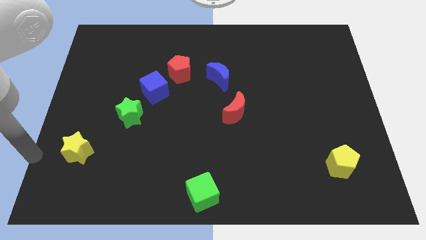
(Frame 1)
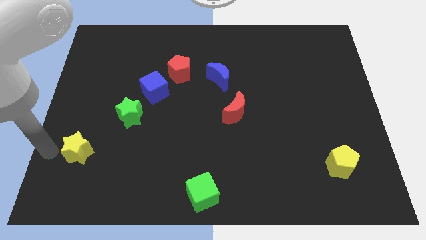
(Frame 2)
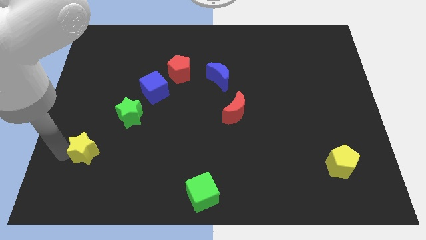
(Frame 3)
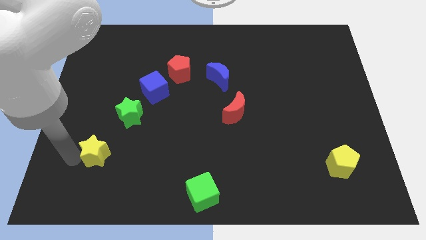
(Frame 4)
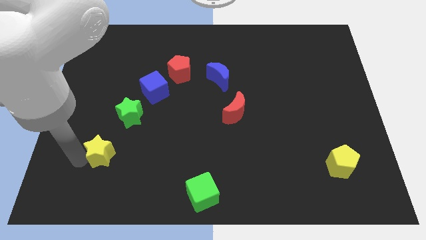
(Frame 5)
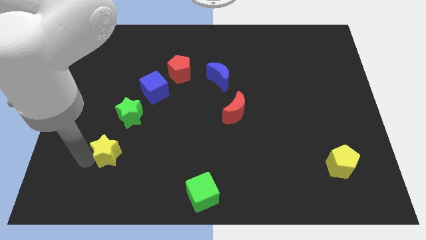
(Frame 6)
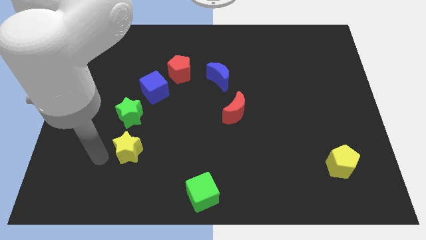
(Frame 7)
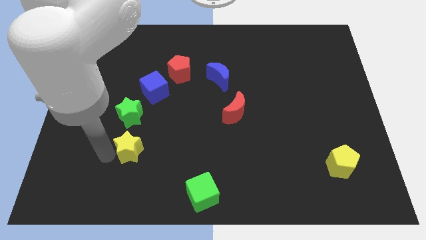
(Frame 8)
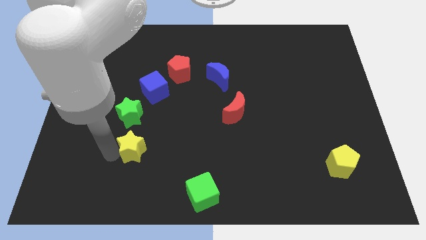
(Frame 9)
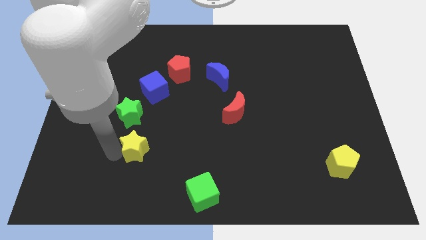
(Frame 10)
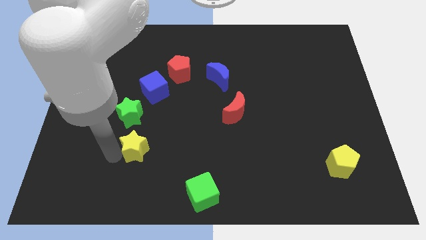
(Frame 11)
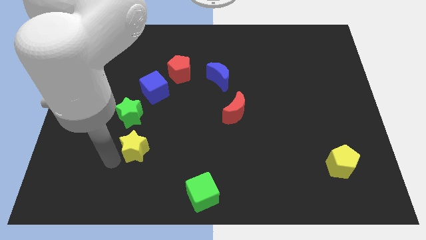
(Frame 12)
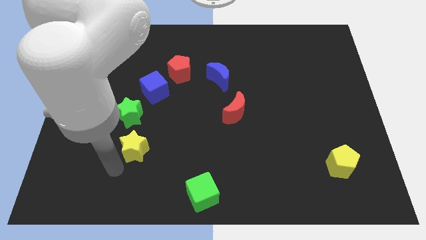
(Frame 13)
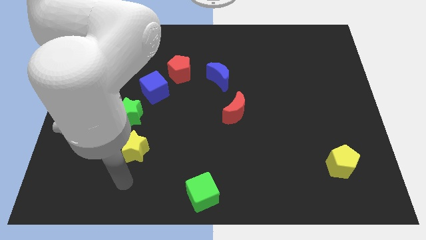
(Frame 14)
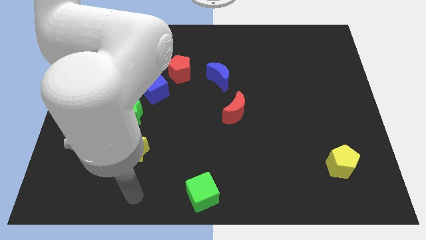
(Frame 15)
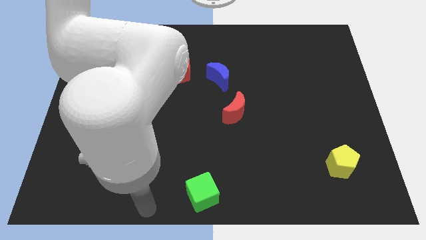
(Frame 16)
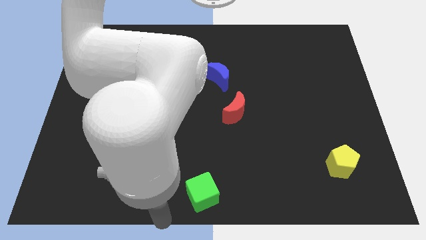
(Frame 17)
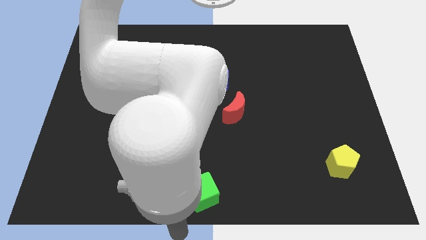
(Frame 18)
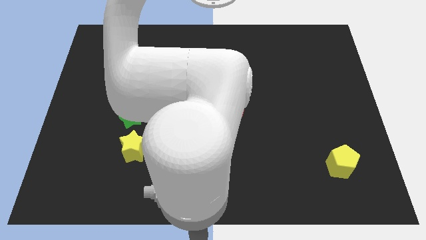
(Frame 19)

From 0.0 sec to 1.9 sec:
put the yellow star vertically below the green star

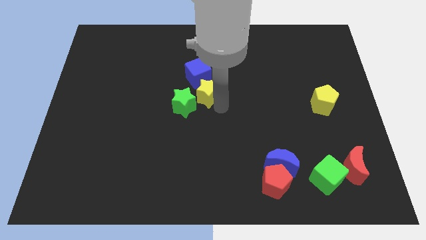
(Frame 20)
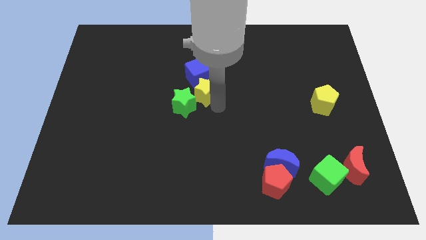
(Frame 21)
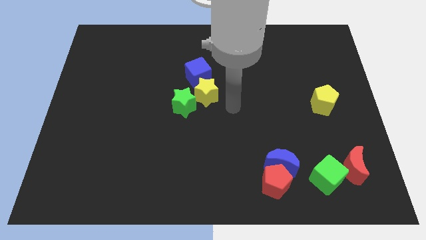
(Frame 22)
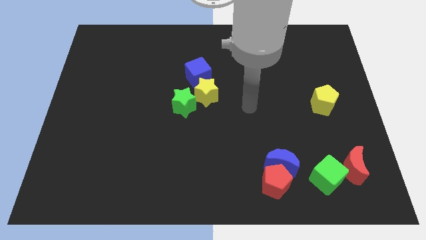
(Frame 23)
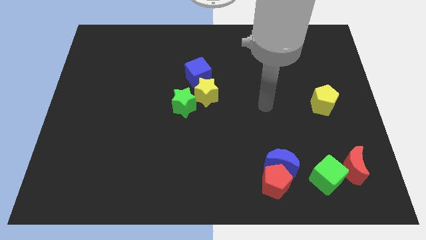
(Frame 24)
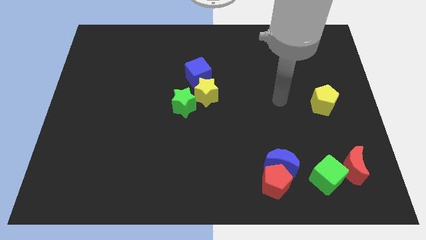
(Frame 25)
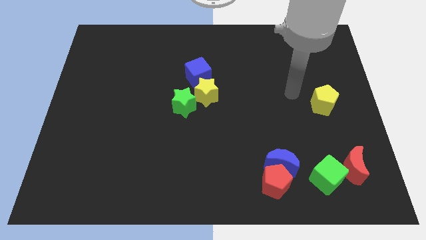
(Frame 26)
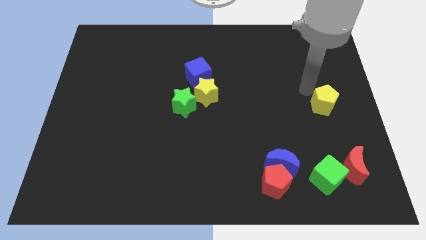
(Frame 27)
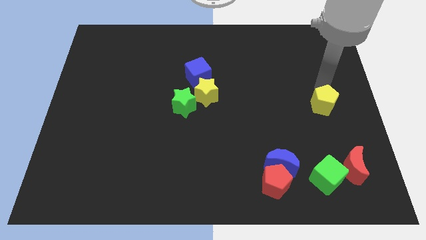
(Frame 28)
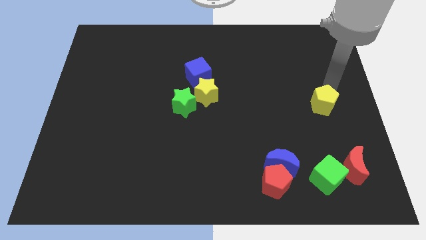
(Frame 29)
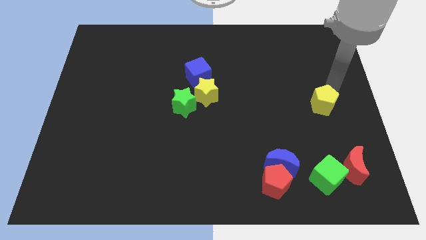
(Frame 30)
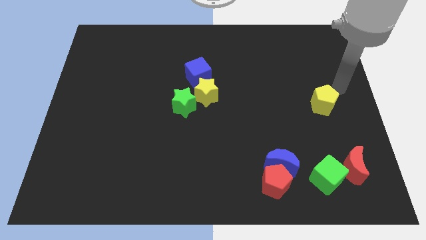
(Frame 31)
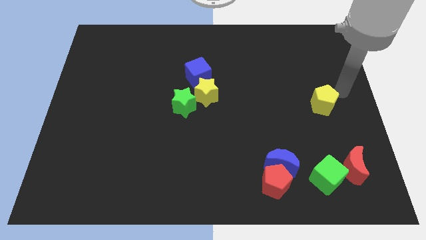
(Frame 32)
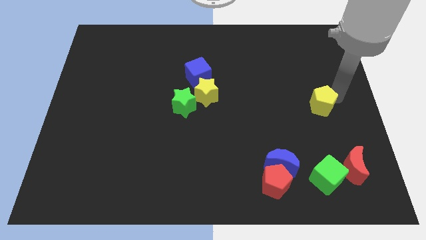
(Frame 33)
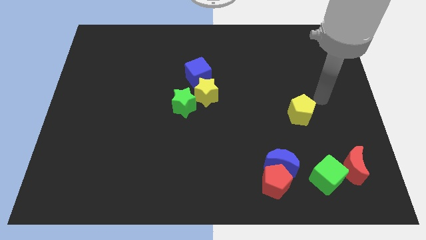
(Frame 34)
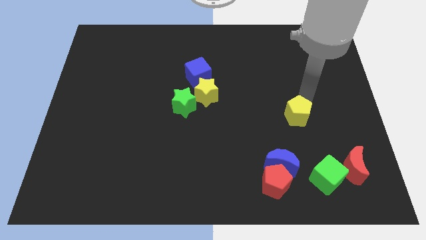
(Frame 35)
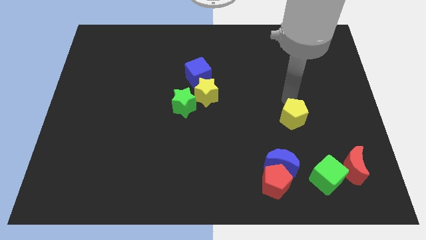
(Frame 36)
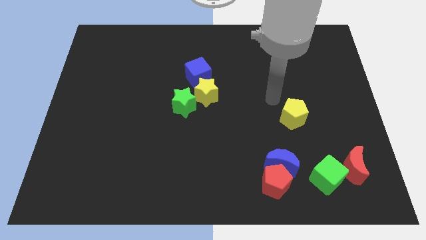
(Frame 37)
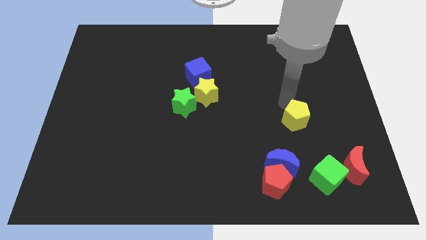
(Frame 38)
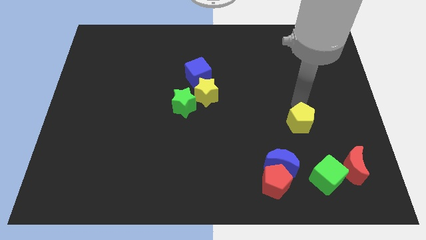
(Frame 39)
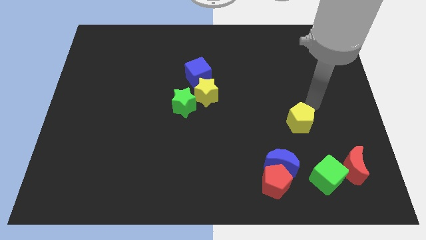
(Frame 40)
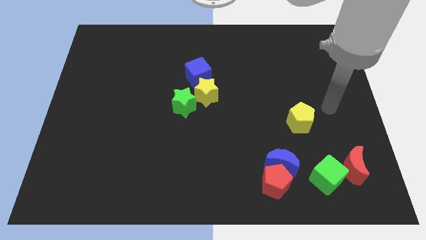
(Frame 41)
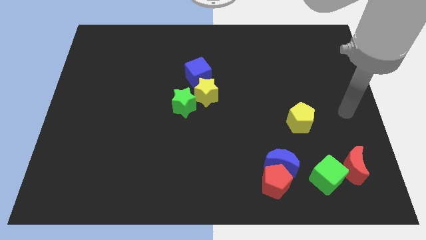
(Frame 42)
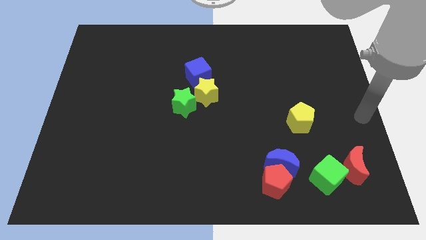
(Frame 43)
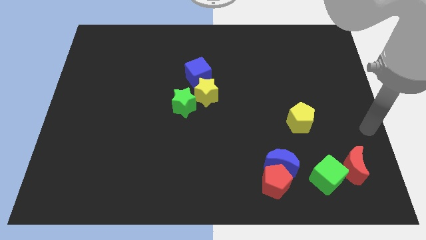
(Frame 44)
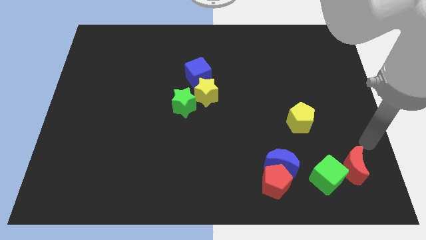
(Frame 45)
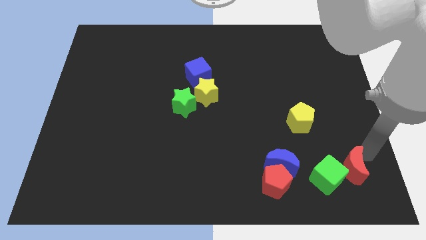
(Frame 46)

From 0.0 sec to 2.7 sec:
push the yellow pentagon to the bottom of the board

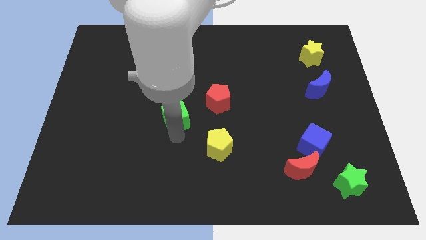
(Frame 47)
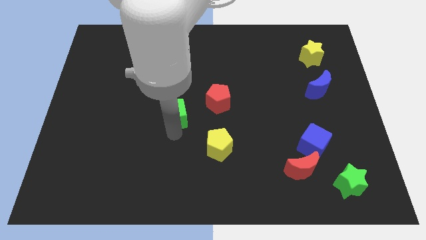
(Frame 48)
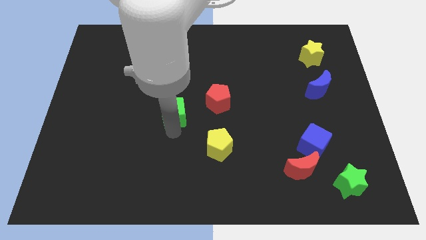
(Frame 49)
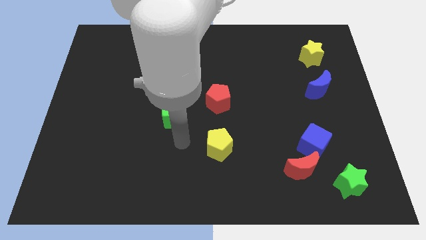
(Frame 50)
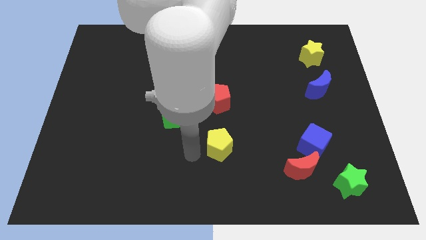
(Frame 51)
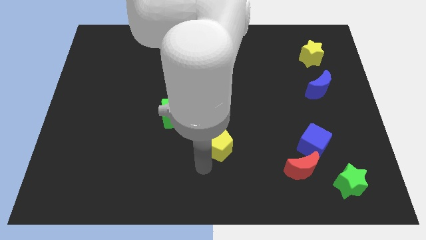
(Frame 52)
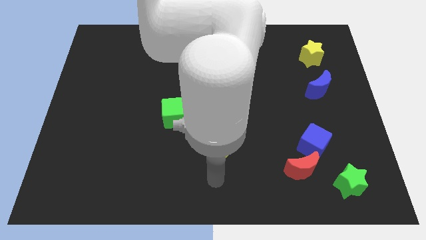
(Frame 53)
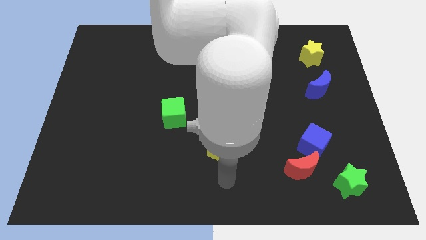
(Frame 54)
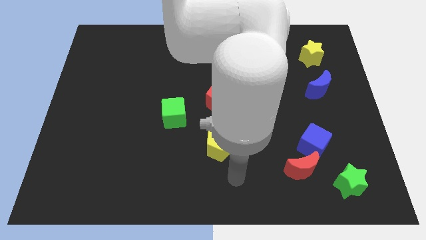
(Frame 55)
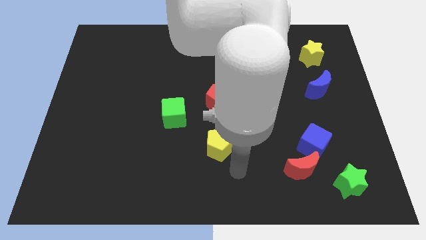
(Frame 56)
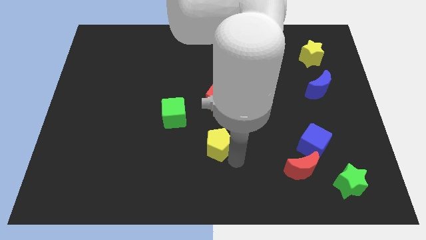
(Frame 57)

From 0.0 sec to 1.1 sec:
place the arm diagonally to the left of the yellow pentagon

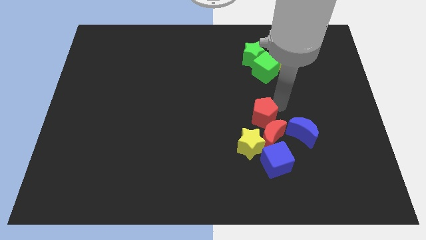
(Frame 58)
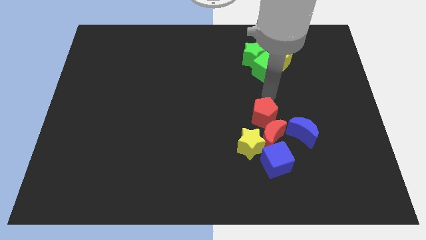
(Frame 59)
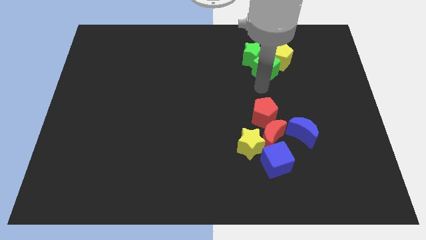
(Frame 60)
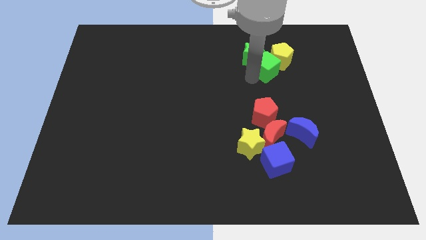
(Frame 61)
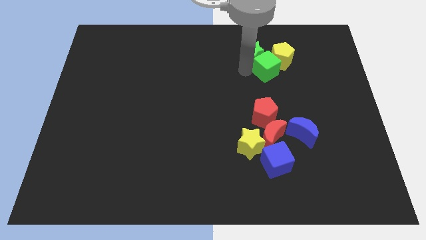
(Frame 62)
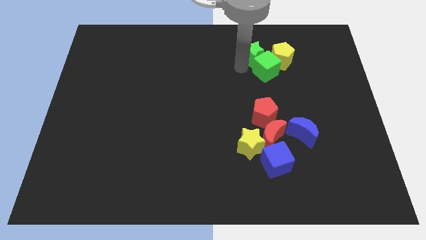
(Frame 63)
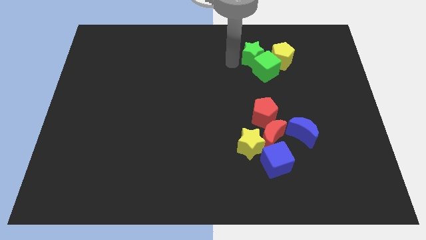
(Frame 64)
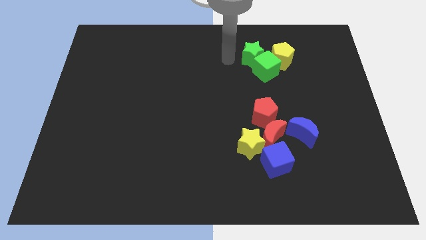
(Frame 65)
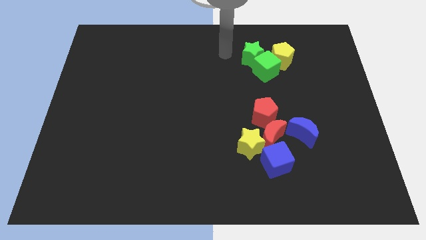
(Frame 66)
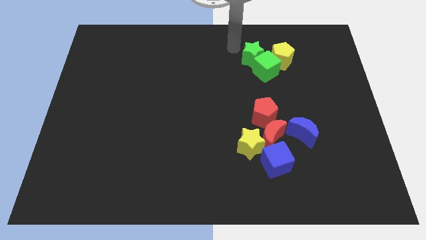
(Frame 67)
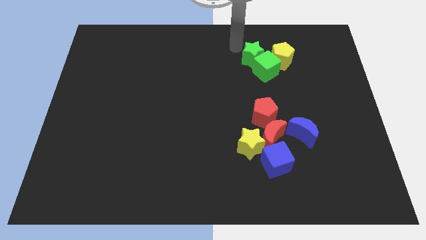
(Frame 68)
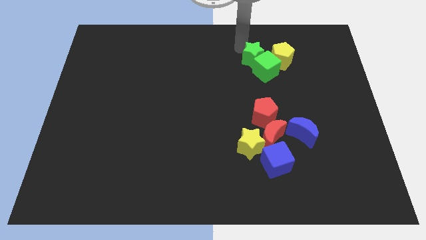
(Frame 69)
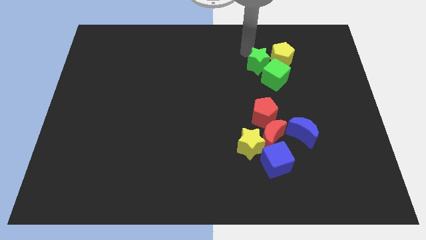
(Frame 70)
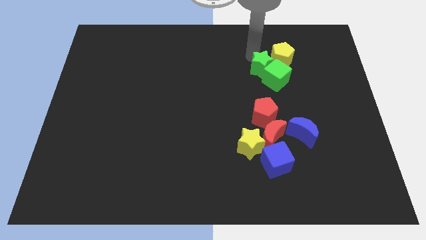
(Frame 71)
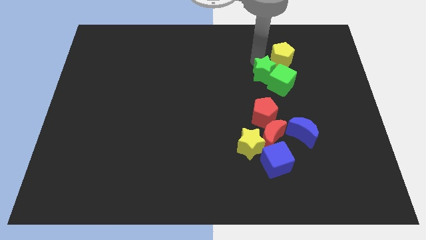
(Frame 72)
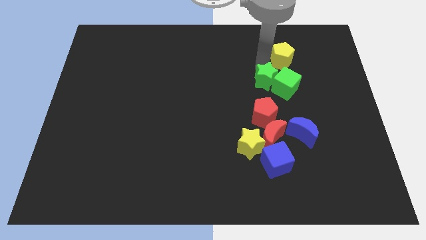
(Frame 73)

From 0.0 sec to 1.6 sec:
drag both the green blocks to the bottom left side of the yellow pentagon

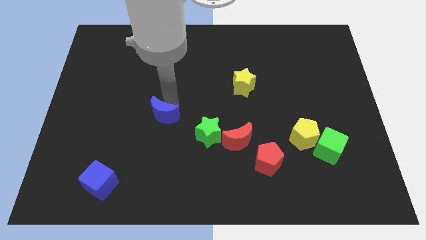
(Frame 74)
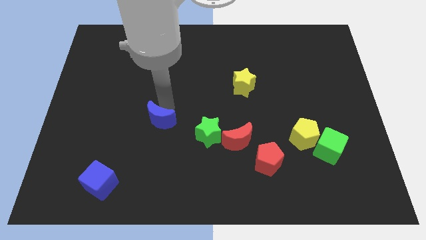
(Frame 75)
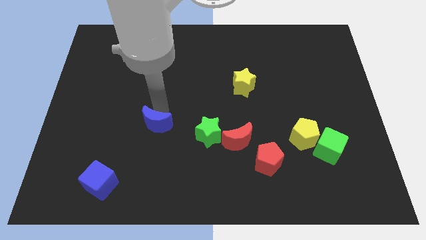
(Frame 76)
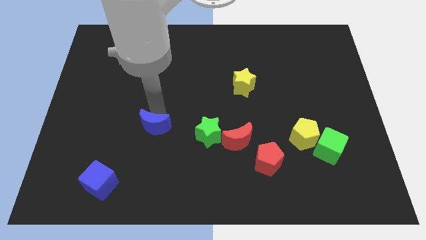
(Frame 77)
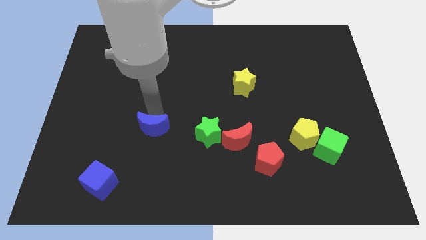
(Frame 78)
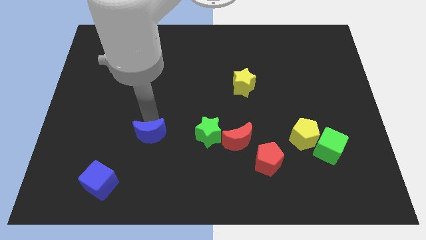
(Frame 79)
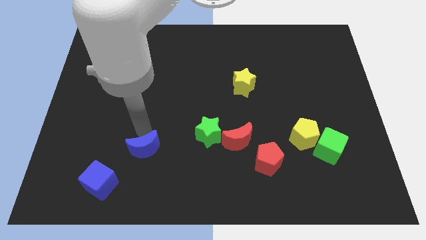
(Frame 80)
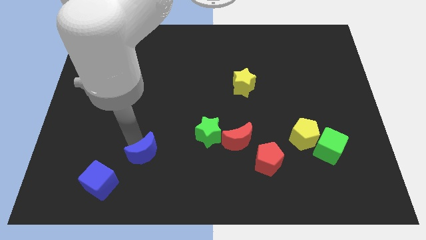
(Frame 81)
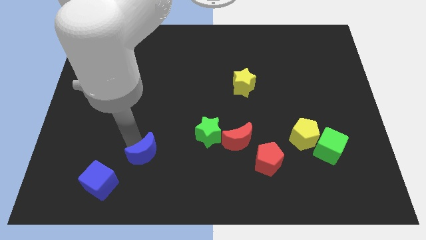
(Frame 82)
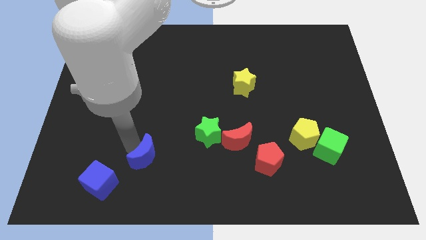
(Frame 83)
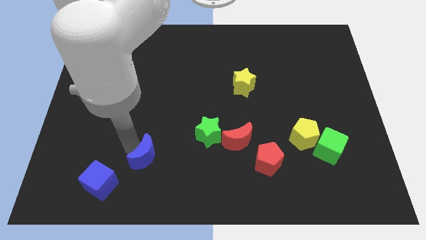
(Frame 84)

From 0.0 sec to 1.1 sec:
slide the blue moon towards the blue cube

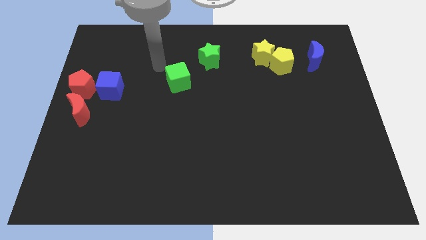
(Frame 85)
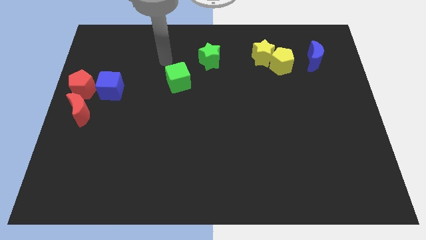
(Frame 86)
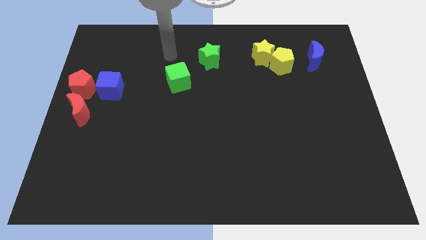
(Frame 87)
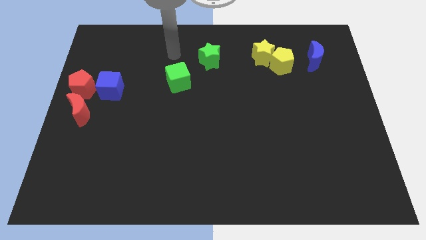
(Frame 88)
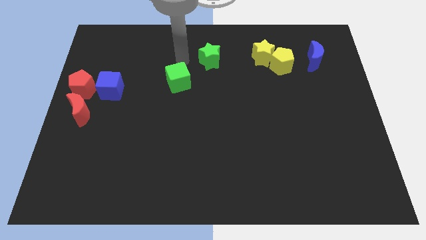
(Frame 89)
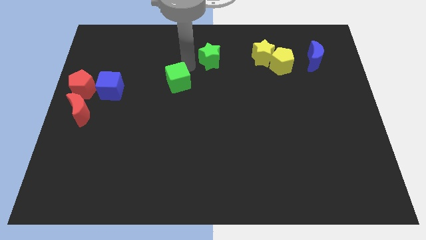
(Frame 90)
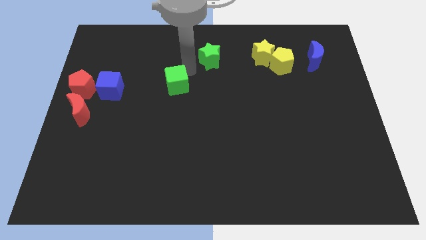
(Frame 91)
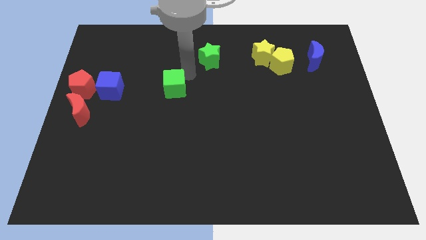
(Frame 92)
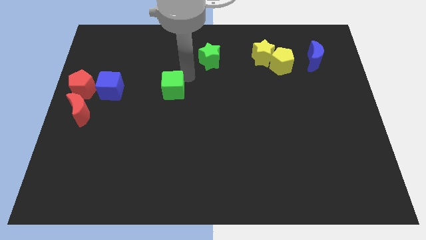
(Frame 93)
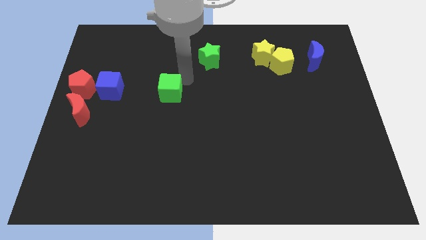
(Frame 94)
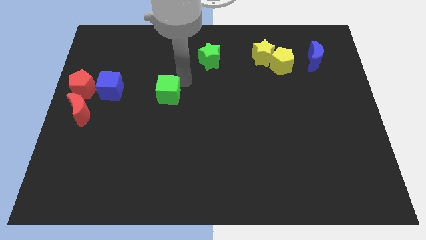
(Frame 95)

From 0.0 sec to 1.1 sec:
move green cube slightly
